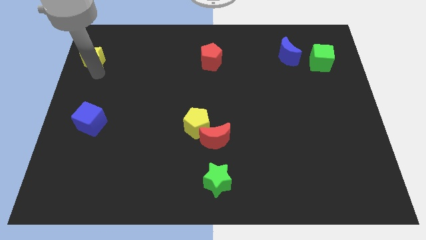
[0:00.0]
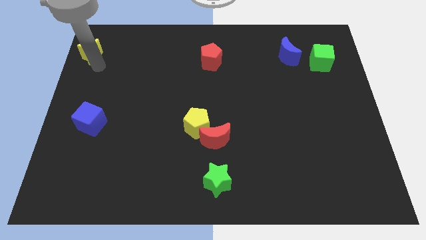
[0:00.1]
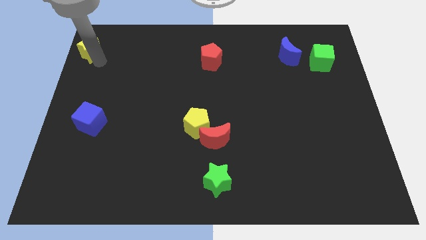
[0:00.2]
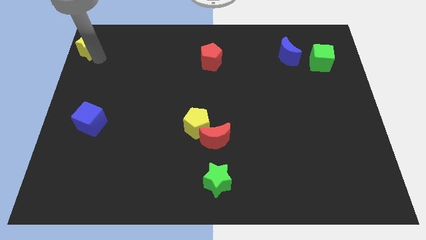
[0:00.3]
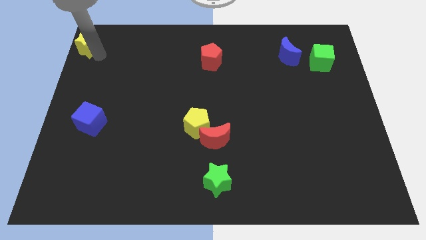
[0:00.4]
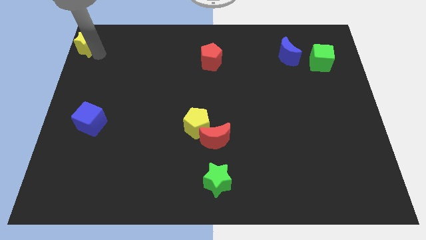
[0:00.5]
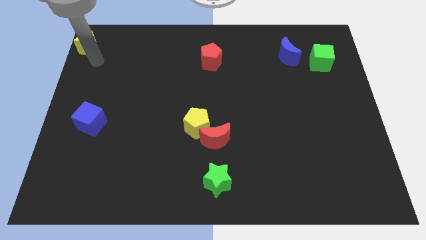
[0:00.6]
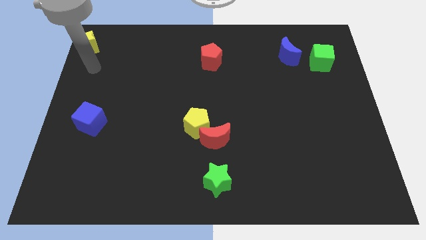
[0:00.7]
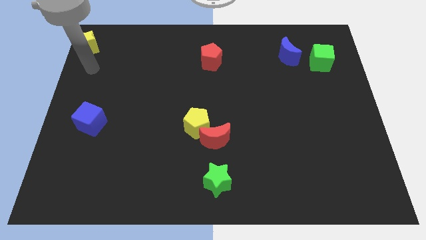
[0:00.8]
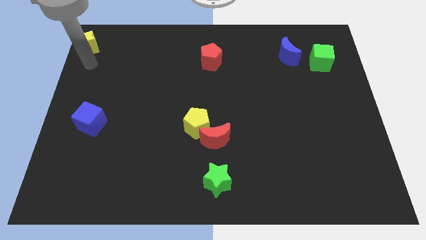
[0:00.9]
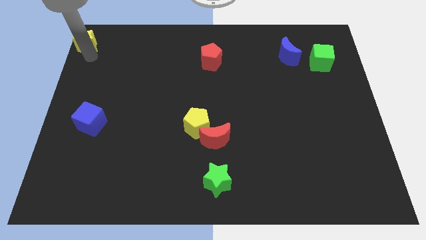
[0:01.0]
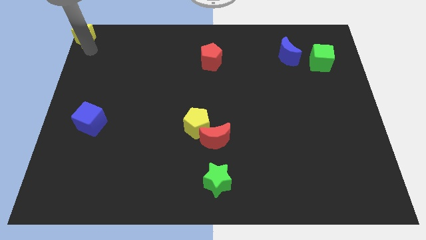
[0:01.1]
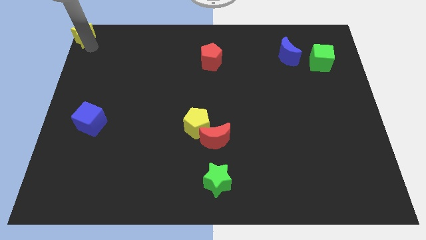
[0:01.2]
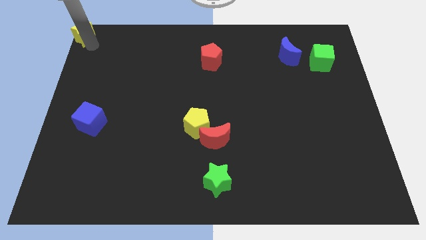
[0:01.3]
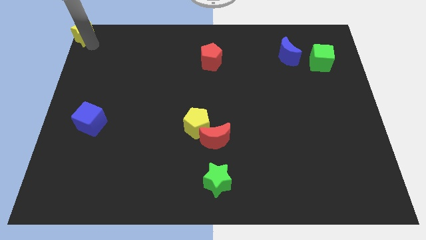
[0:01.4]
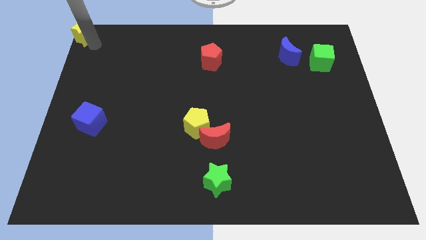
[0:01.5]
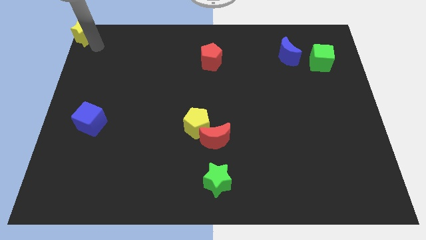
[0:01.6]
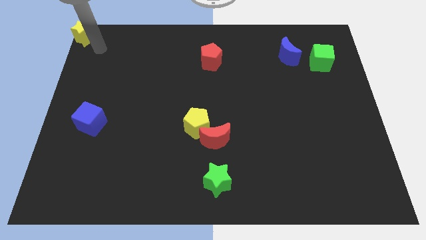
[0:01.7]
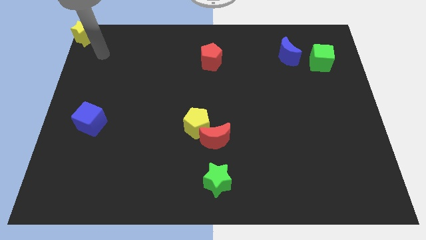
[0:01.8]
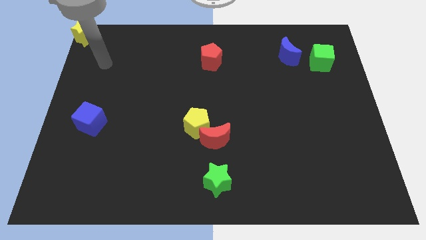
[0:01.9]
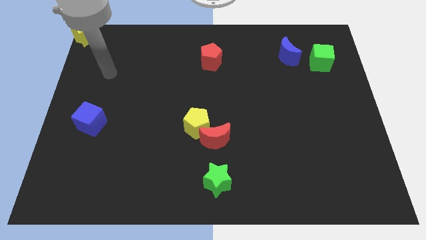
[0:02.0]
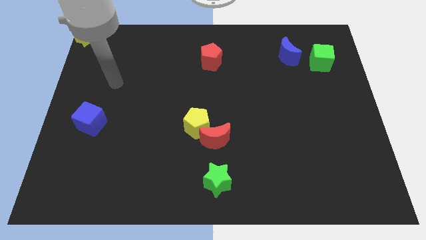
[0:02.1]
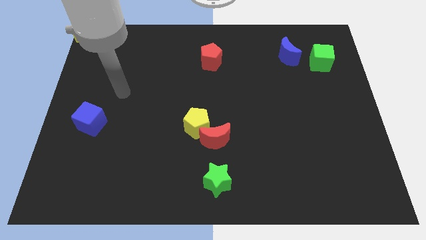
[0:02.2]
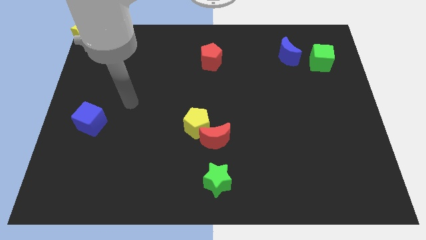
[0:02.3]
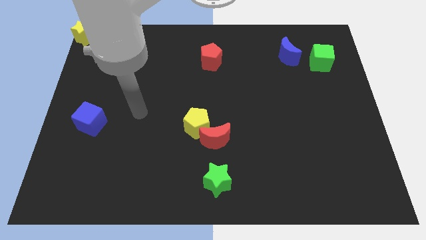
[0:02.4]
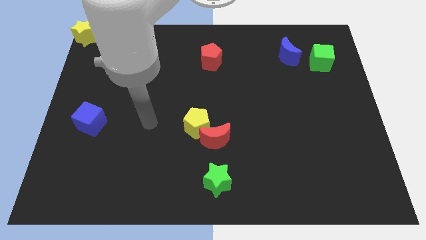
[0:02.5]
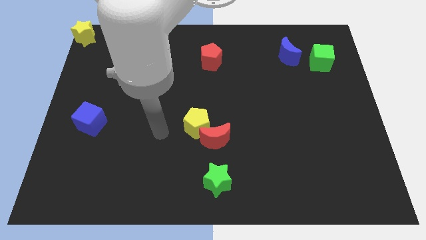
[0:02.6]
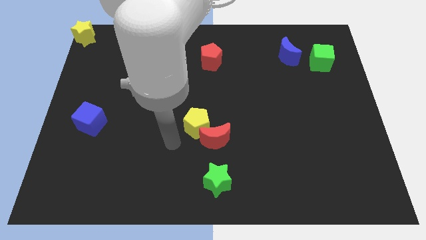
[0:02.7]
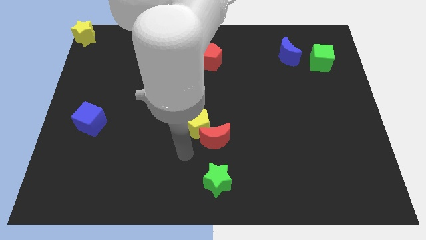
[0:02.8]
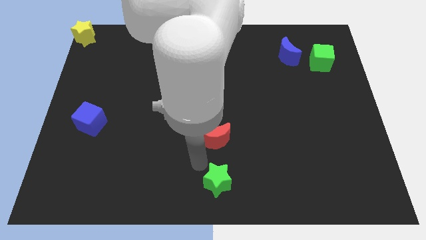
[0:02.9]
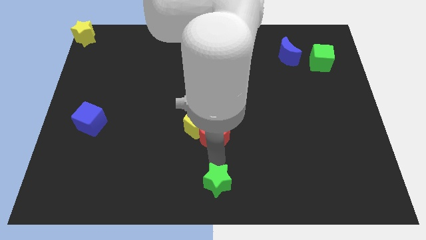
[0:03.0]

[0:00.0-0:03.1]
place the yellow star at the top left corner of the board

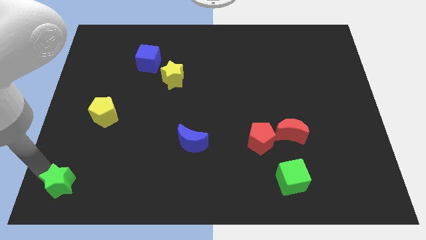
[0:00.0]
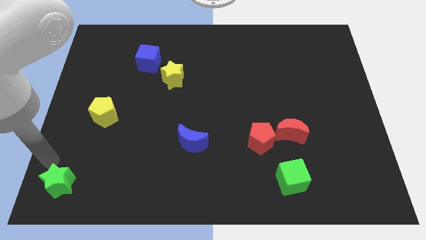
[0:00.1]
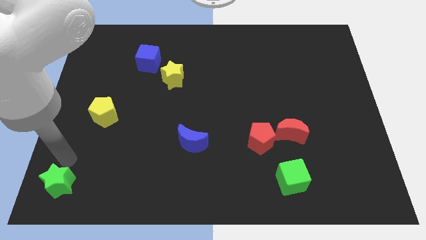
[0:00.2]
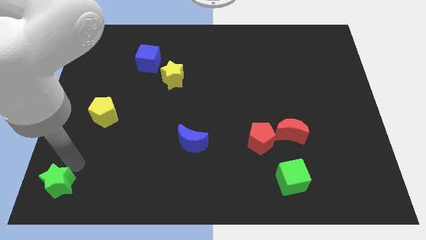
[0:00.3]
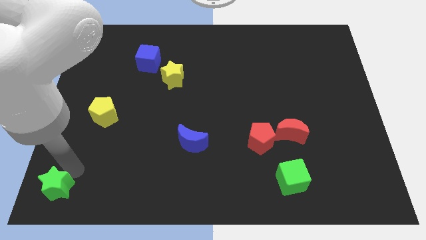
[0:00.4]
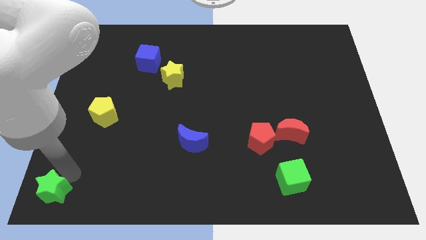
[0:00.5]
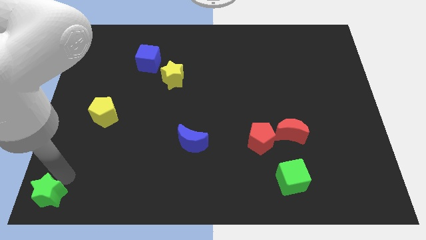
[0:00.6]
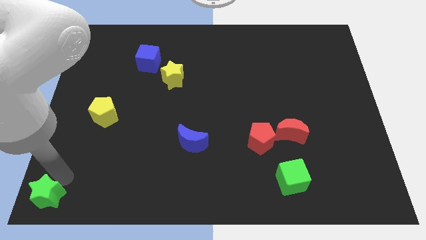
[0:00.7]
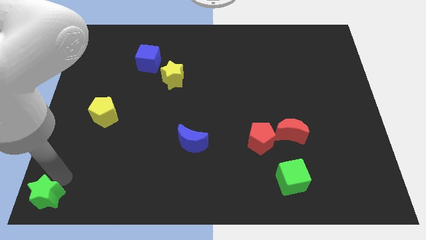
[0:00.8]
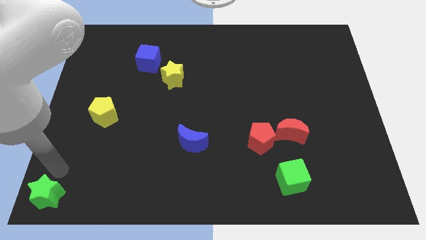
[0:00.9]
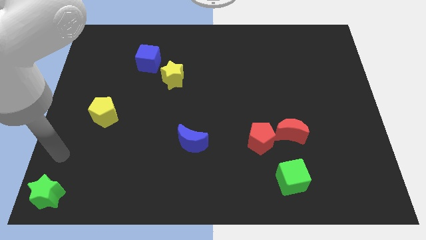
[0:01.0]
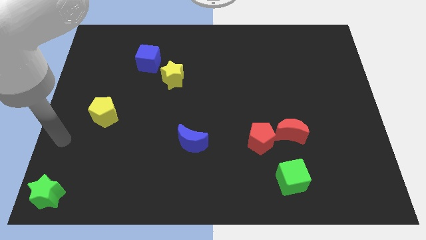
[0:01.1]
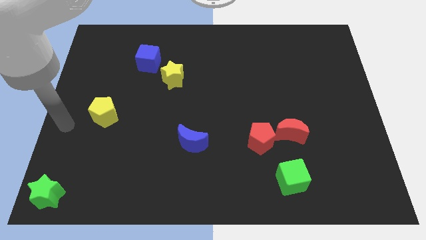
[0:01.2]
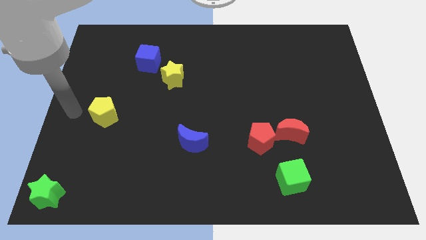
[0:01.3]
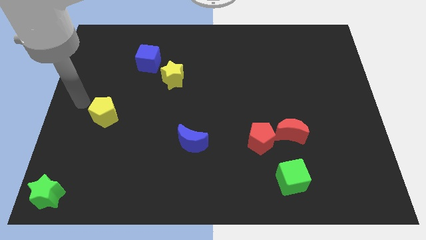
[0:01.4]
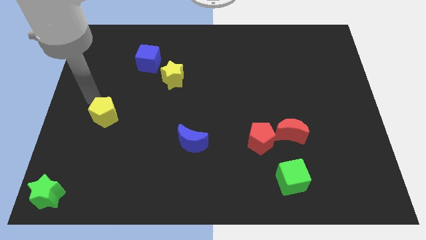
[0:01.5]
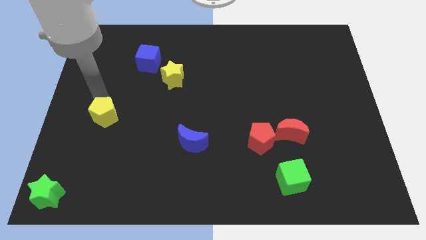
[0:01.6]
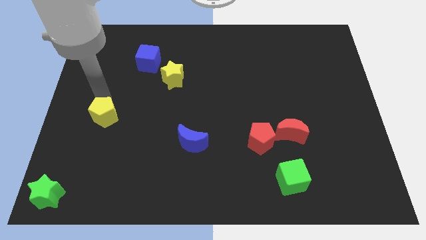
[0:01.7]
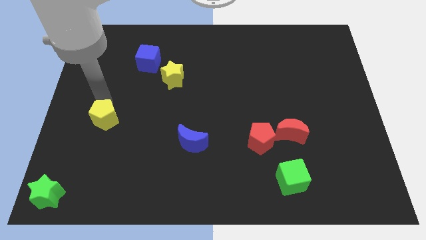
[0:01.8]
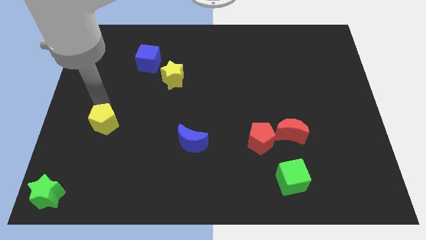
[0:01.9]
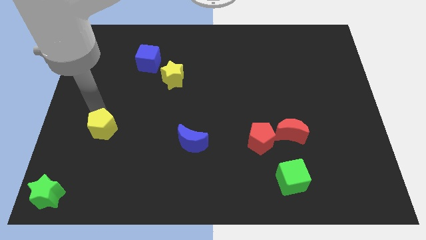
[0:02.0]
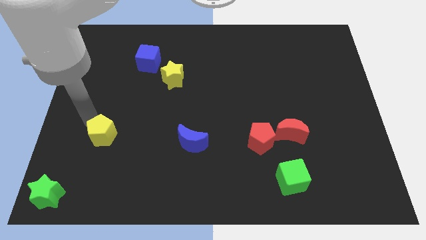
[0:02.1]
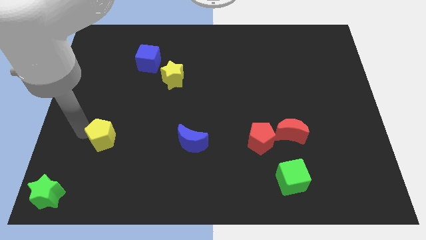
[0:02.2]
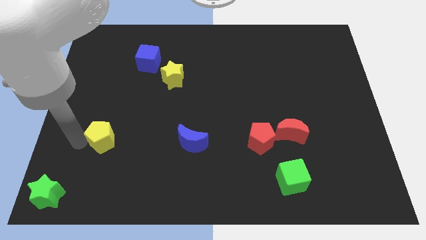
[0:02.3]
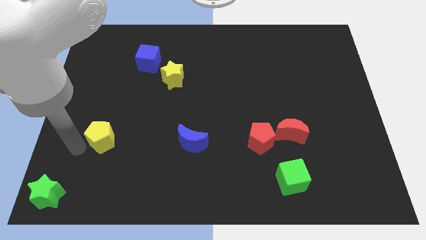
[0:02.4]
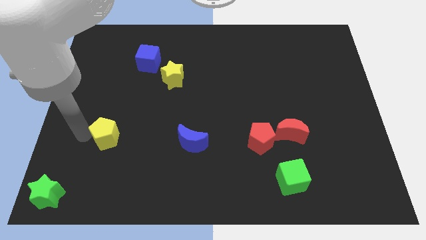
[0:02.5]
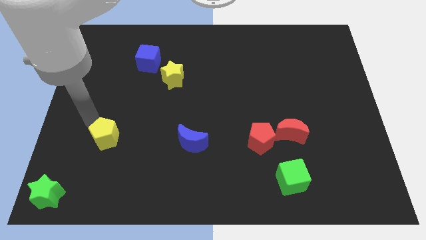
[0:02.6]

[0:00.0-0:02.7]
push yellow pentagon beside blue crescent

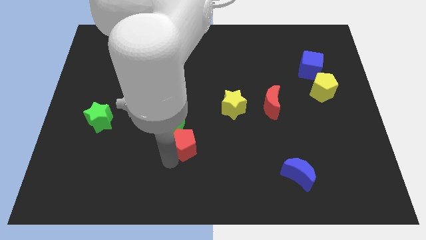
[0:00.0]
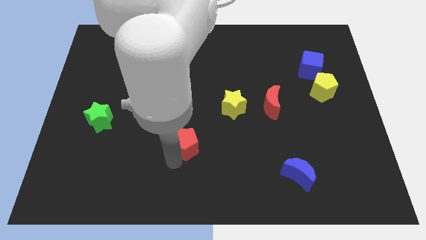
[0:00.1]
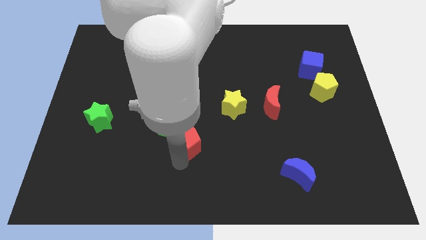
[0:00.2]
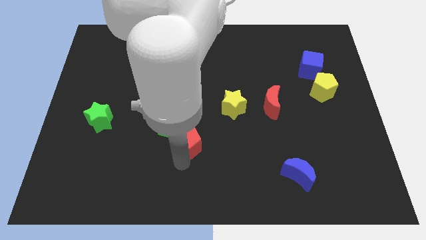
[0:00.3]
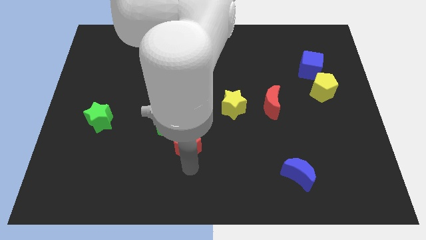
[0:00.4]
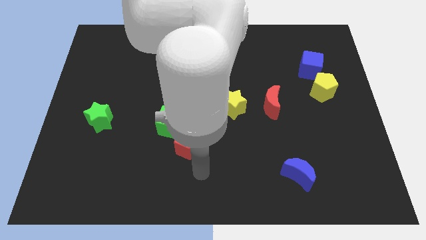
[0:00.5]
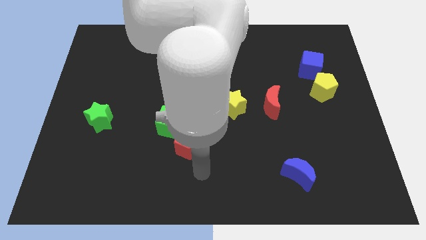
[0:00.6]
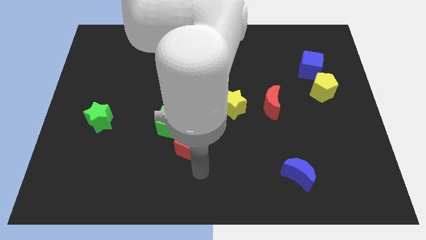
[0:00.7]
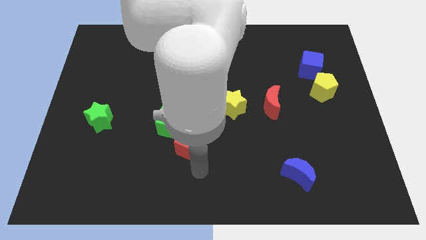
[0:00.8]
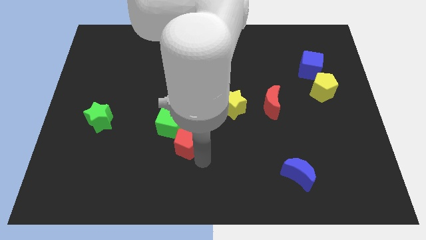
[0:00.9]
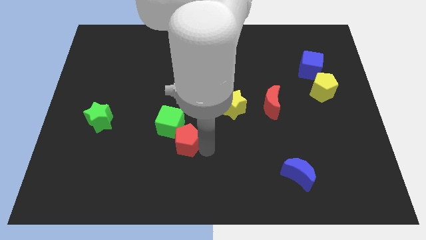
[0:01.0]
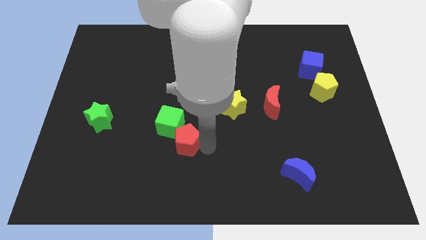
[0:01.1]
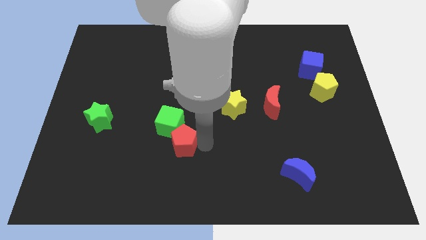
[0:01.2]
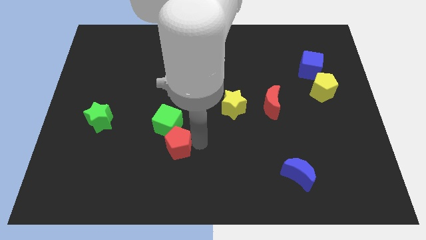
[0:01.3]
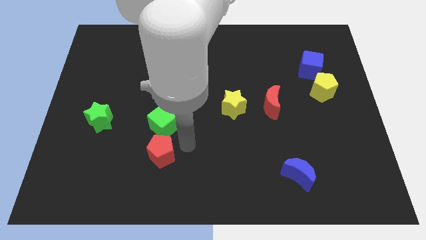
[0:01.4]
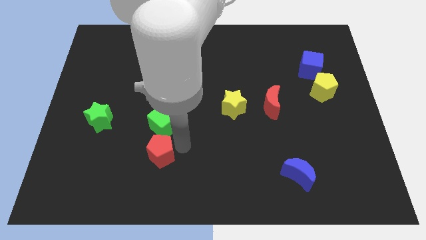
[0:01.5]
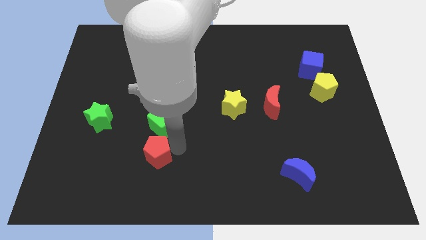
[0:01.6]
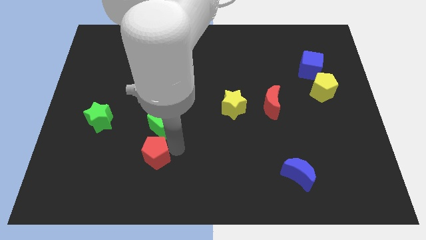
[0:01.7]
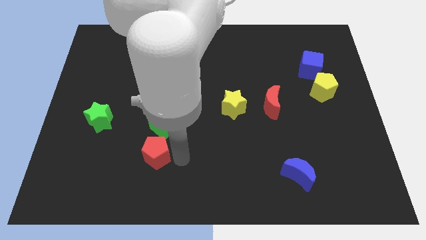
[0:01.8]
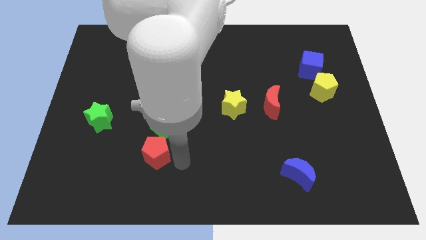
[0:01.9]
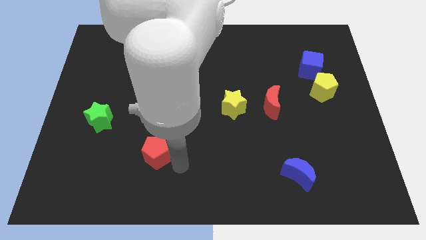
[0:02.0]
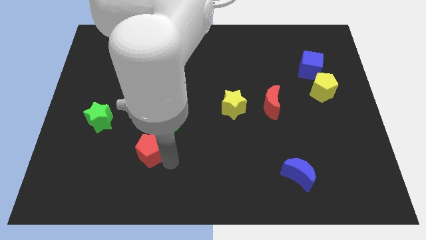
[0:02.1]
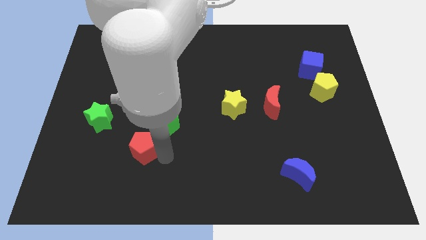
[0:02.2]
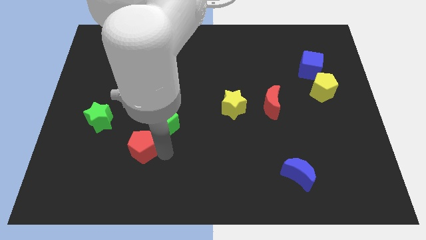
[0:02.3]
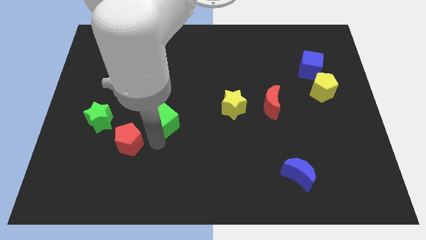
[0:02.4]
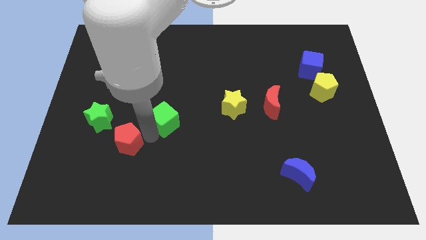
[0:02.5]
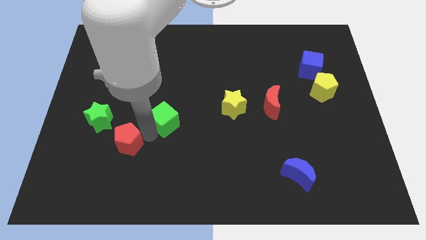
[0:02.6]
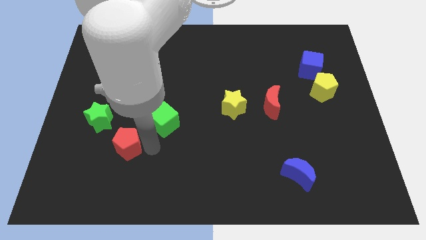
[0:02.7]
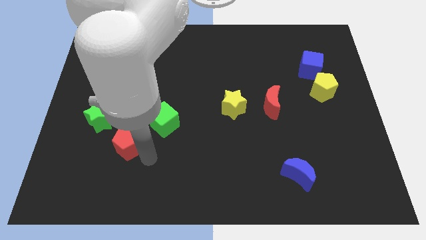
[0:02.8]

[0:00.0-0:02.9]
separate the red pentagon from the green cube

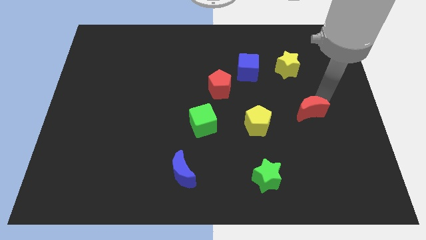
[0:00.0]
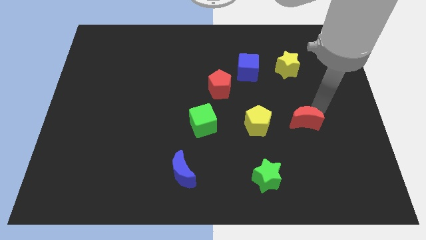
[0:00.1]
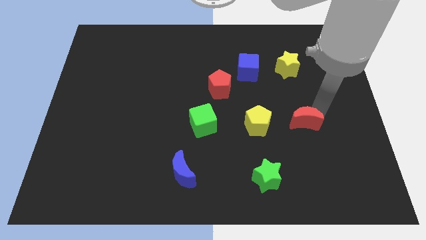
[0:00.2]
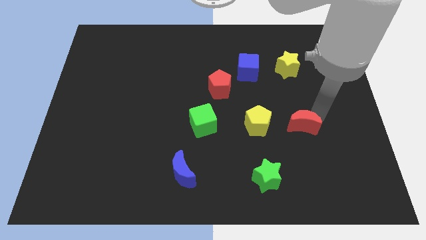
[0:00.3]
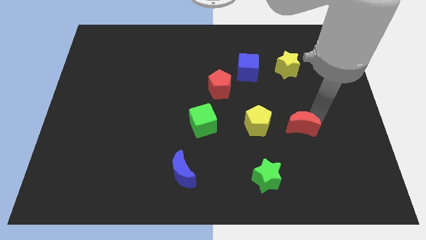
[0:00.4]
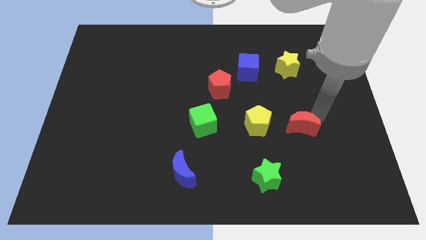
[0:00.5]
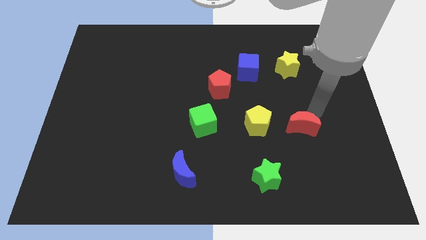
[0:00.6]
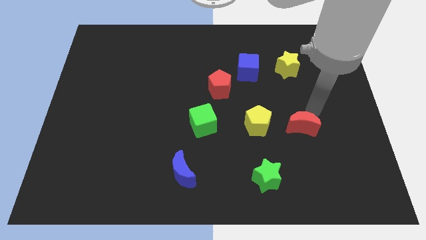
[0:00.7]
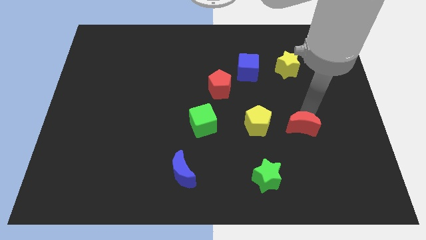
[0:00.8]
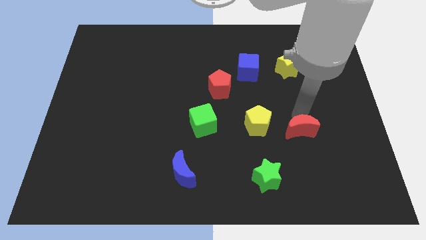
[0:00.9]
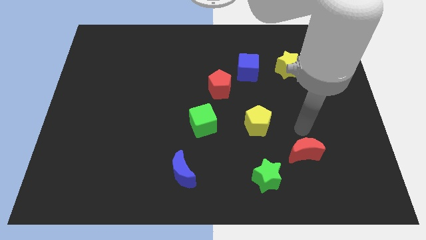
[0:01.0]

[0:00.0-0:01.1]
move red moon near green star
